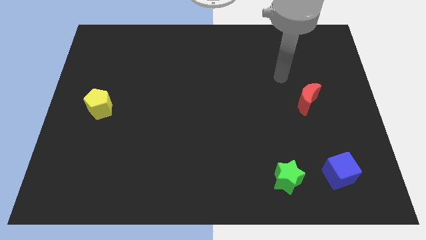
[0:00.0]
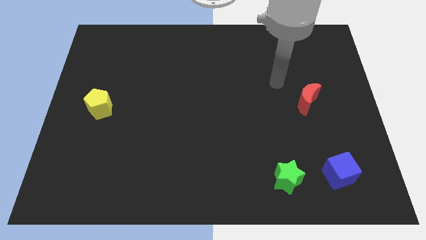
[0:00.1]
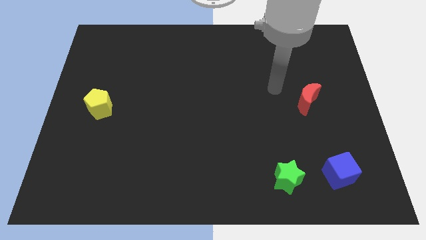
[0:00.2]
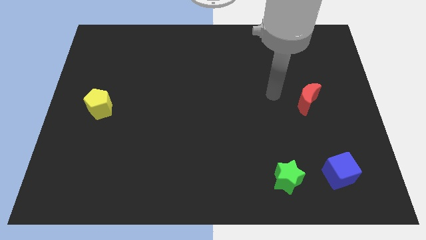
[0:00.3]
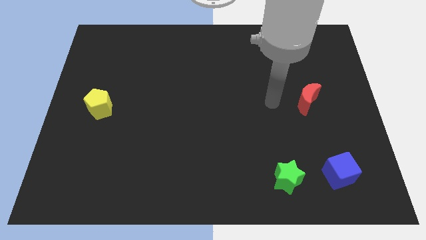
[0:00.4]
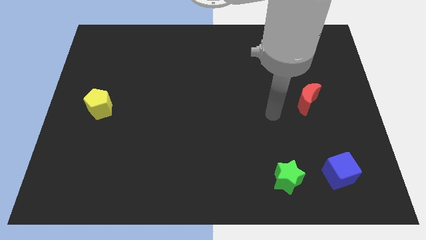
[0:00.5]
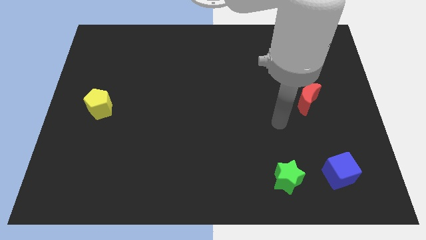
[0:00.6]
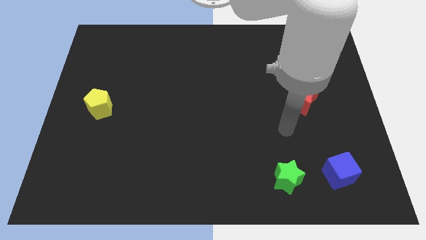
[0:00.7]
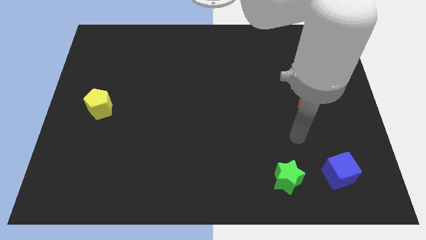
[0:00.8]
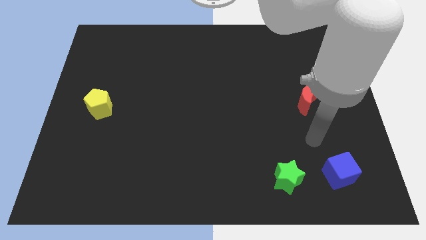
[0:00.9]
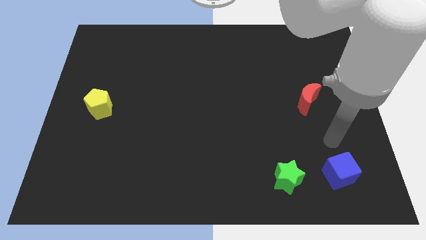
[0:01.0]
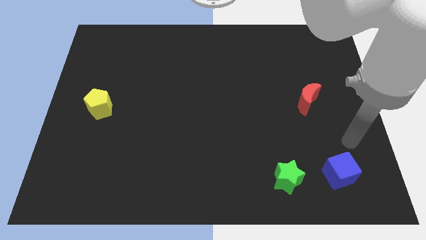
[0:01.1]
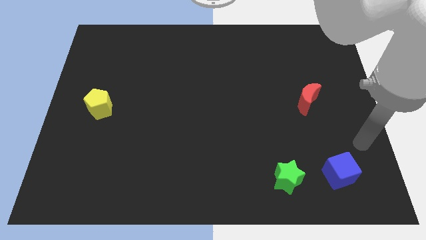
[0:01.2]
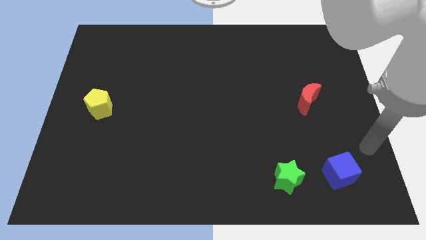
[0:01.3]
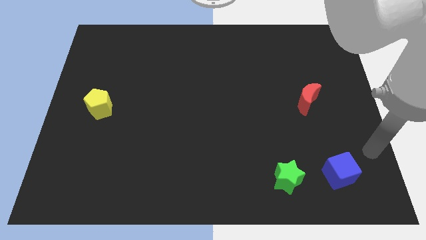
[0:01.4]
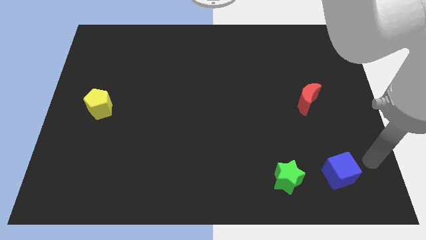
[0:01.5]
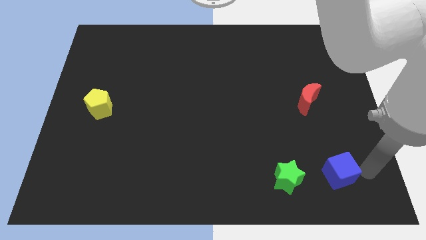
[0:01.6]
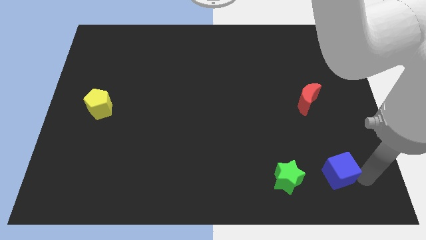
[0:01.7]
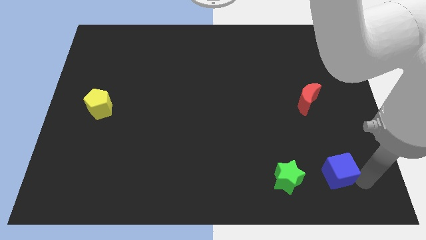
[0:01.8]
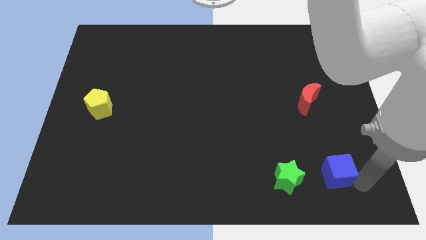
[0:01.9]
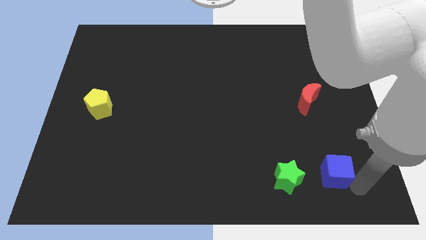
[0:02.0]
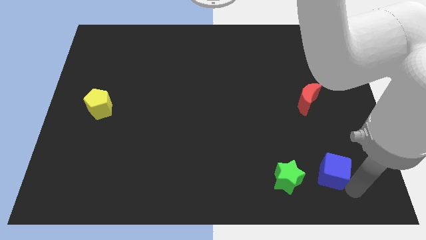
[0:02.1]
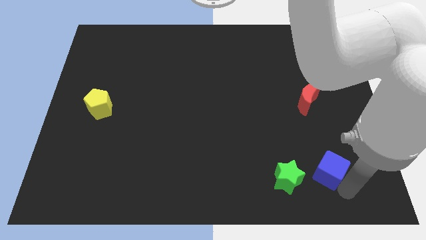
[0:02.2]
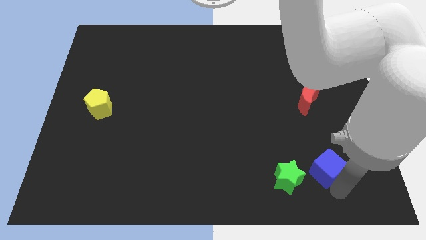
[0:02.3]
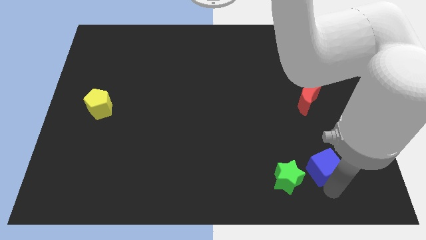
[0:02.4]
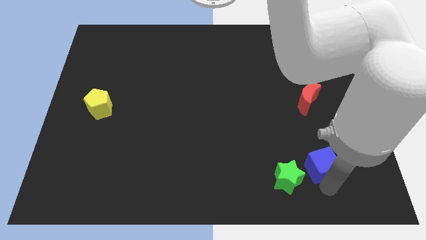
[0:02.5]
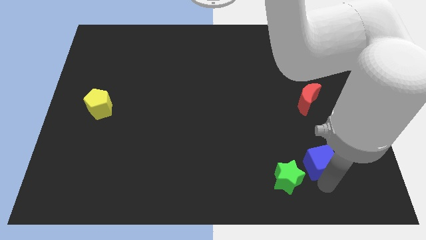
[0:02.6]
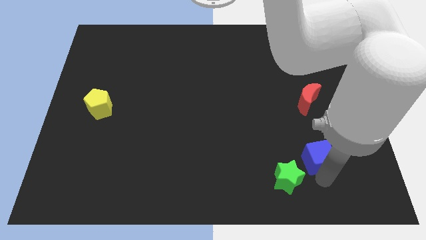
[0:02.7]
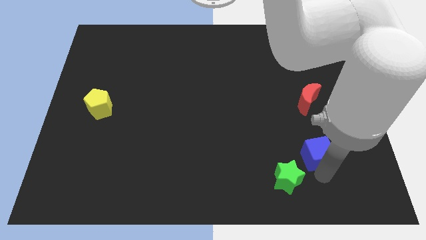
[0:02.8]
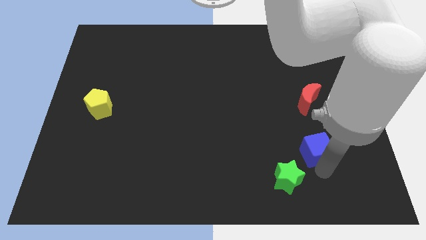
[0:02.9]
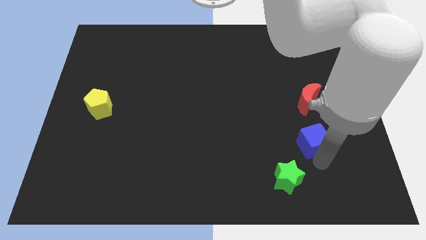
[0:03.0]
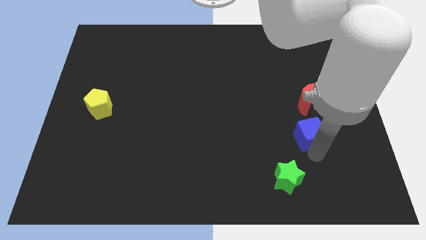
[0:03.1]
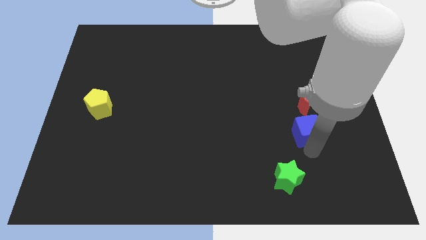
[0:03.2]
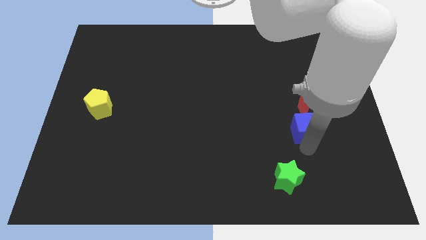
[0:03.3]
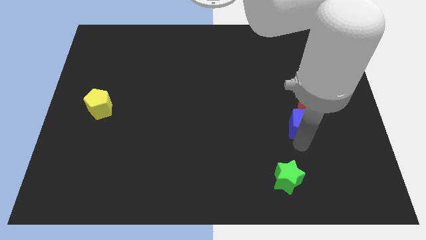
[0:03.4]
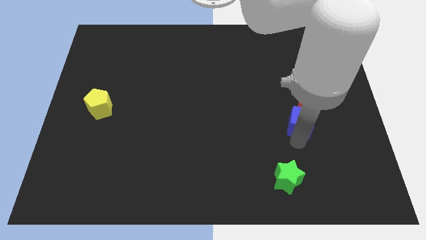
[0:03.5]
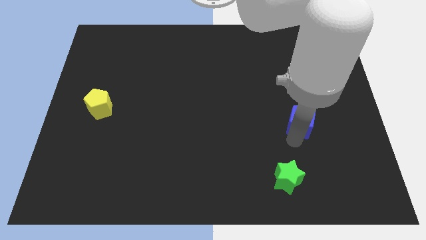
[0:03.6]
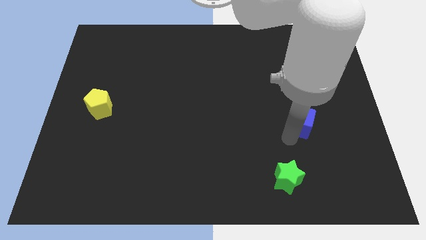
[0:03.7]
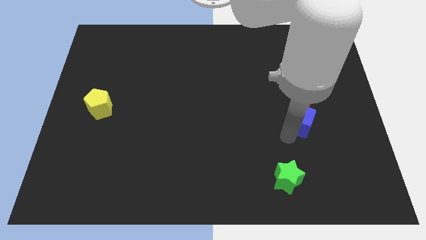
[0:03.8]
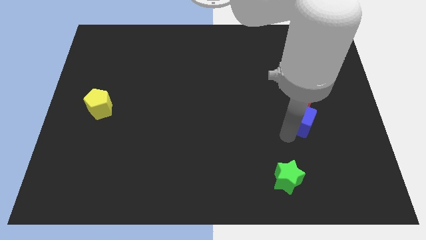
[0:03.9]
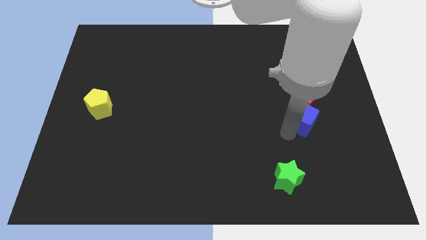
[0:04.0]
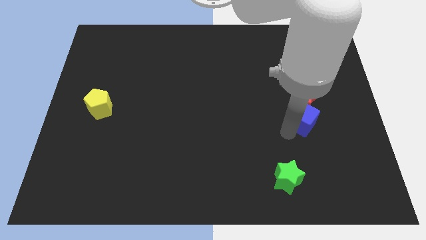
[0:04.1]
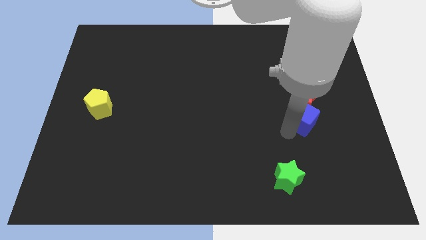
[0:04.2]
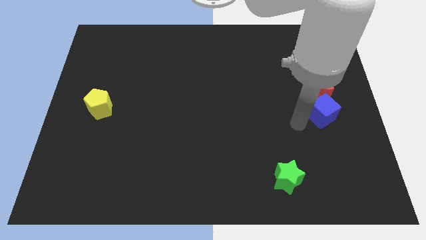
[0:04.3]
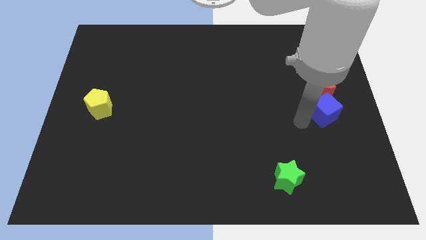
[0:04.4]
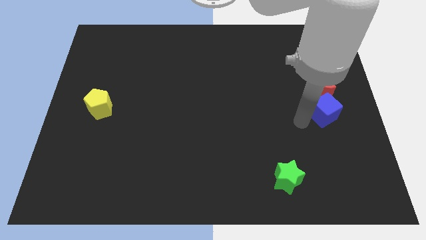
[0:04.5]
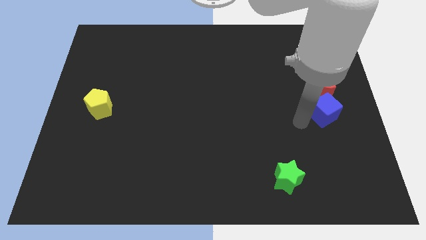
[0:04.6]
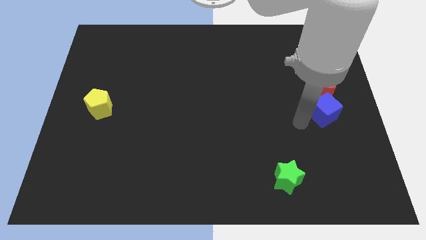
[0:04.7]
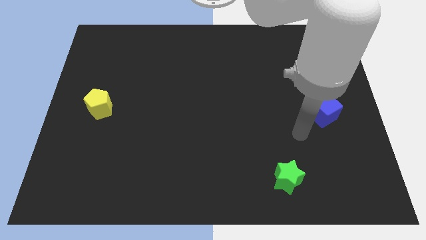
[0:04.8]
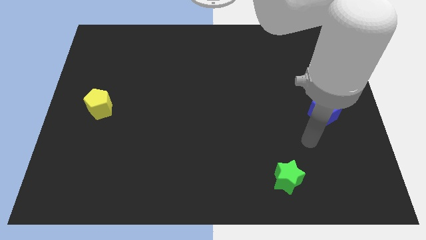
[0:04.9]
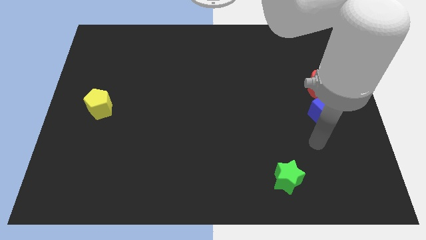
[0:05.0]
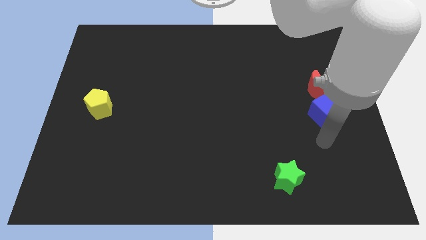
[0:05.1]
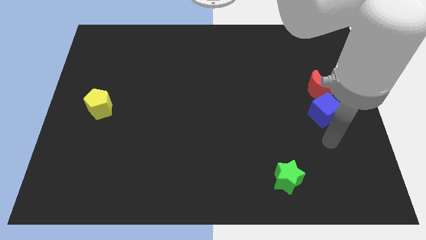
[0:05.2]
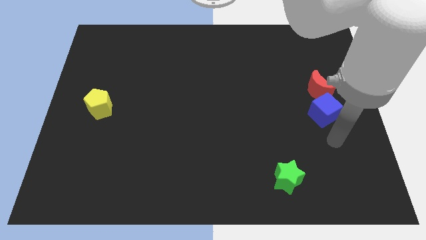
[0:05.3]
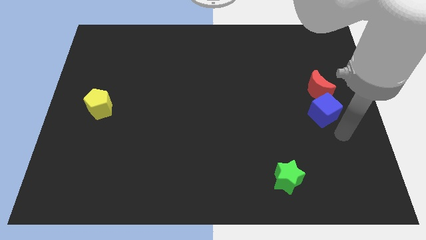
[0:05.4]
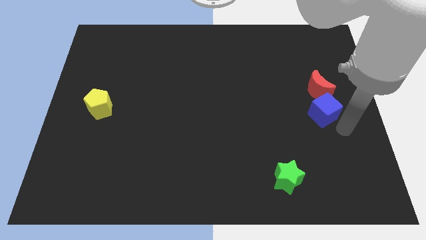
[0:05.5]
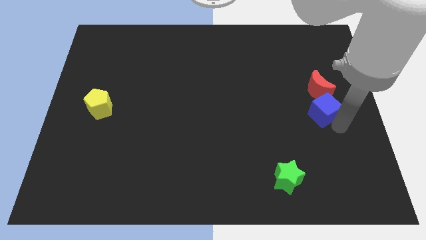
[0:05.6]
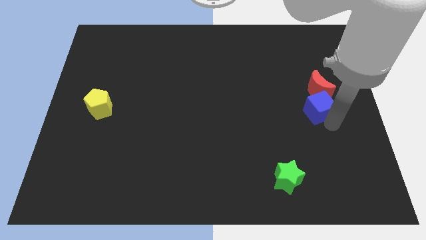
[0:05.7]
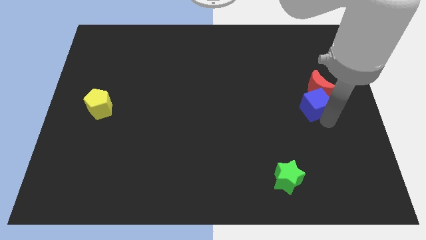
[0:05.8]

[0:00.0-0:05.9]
put the blue block next to the moon

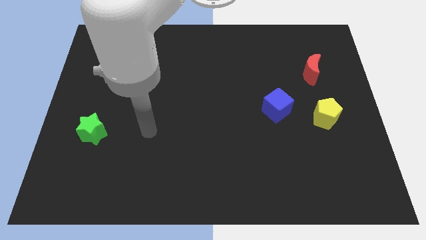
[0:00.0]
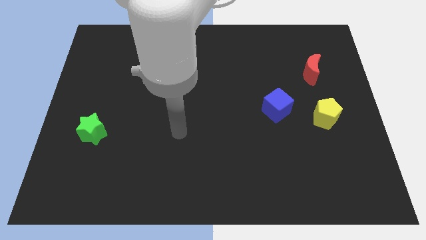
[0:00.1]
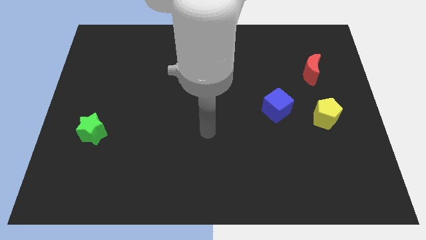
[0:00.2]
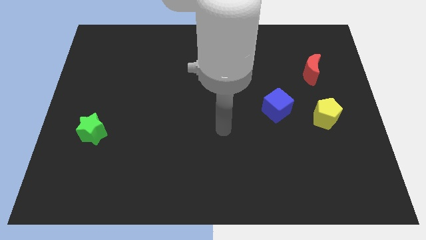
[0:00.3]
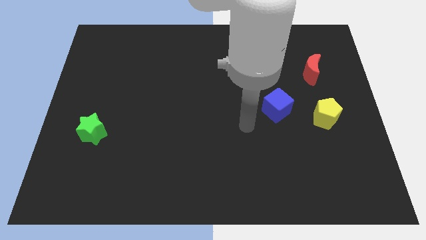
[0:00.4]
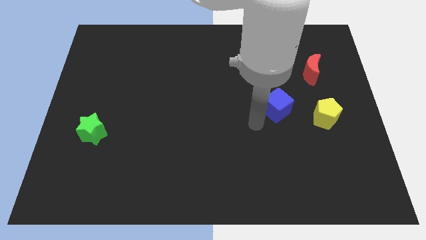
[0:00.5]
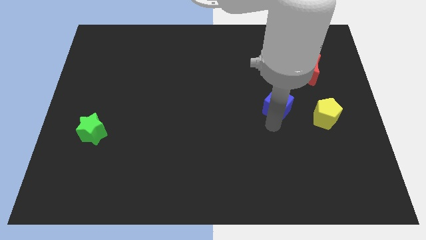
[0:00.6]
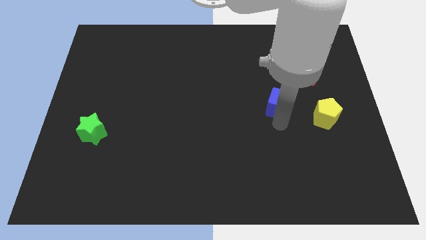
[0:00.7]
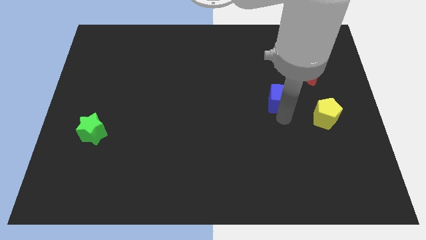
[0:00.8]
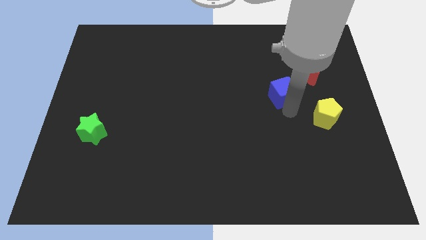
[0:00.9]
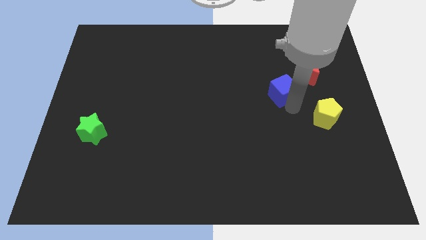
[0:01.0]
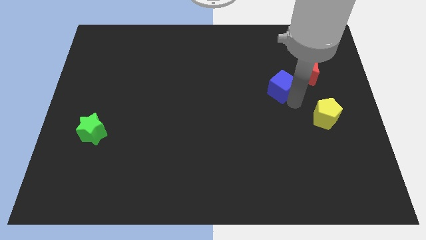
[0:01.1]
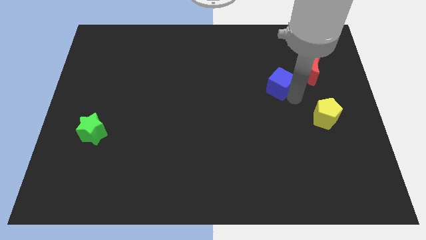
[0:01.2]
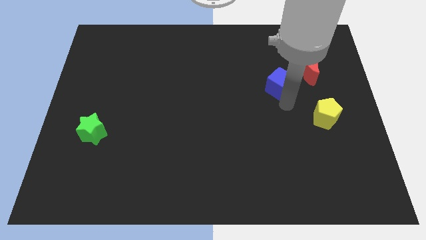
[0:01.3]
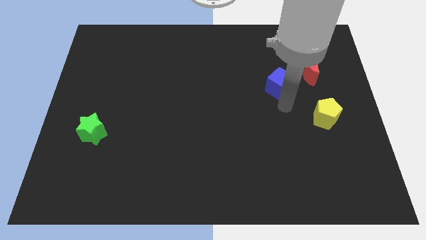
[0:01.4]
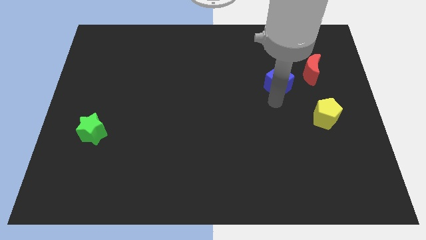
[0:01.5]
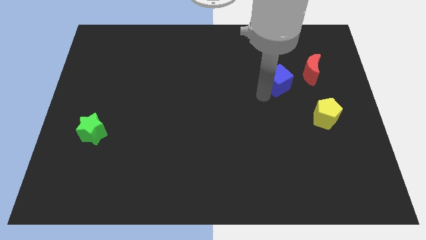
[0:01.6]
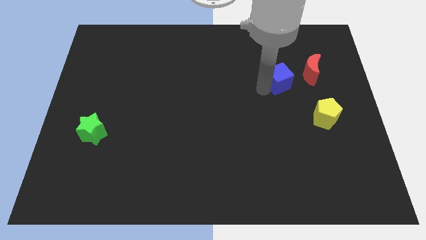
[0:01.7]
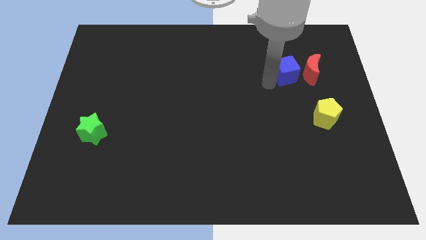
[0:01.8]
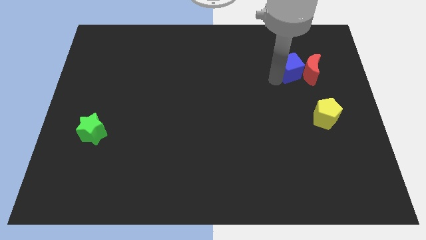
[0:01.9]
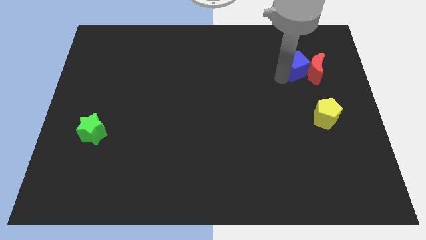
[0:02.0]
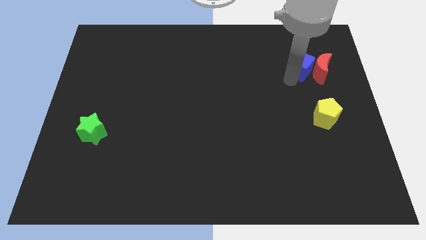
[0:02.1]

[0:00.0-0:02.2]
move the blue block to the moon

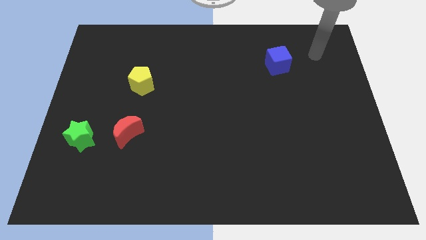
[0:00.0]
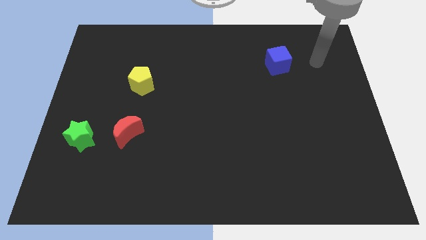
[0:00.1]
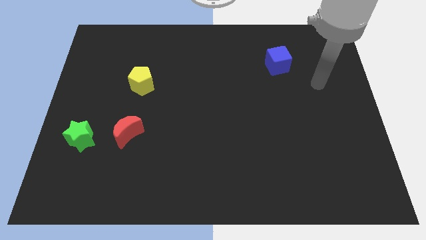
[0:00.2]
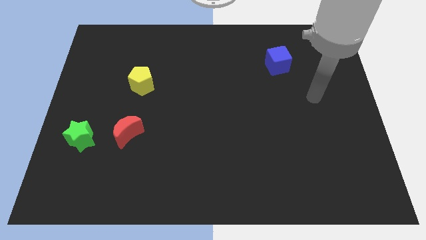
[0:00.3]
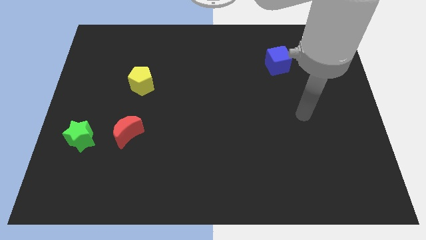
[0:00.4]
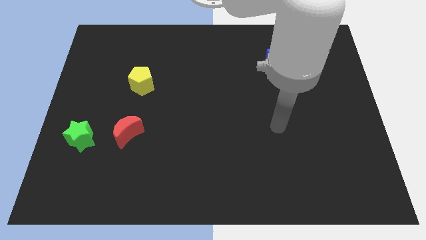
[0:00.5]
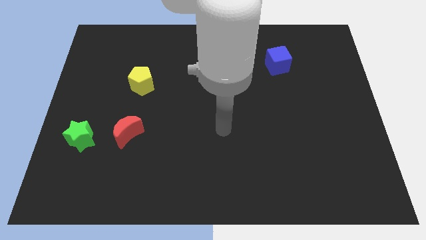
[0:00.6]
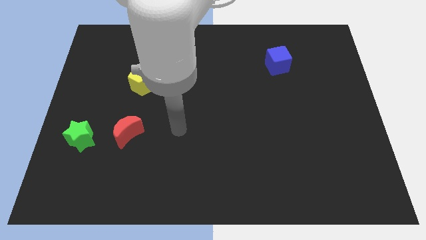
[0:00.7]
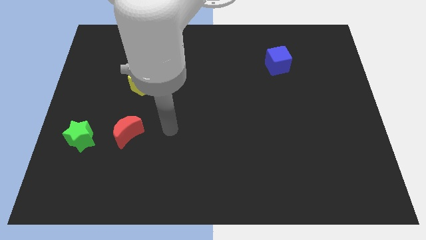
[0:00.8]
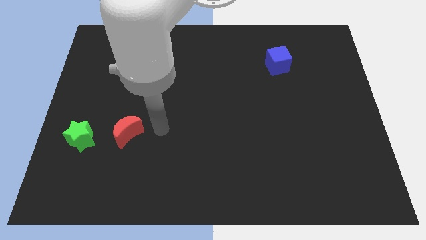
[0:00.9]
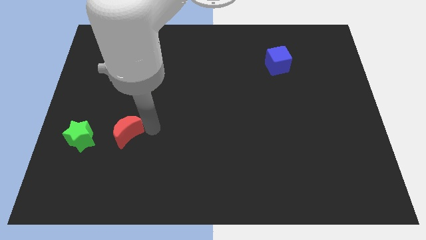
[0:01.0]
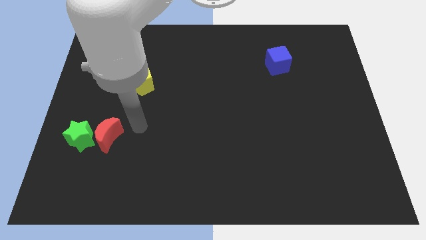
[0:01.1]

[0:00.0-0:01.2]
move the red block next to the star
